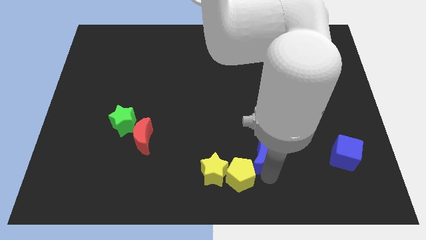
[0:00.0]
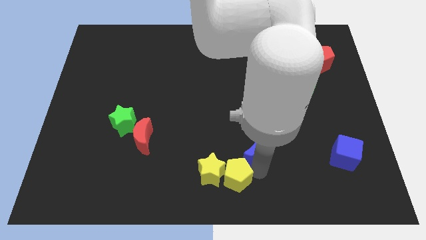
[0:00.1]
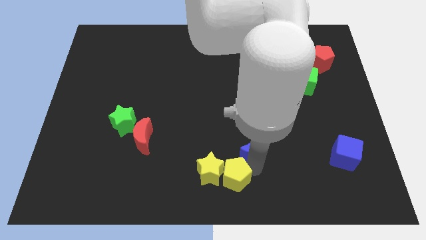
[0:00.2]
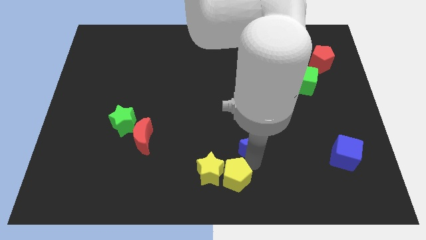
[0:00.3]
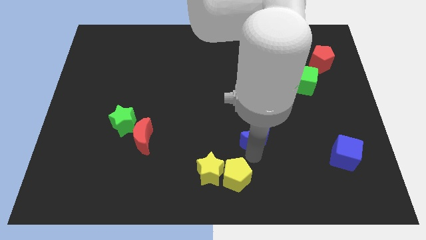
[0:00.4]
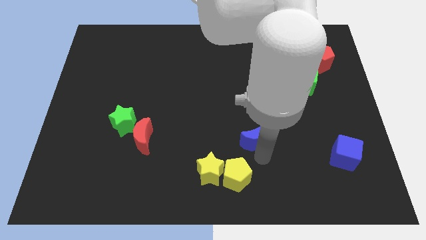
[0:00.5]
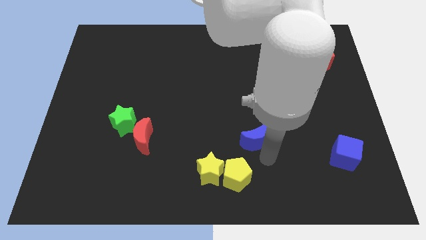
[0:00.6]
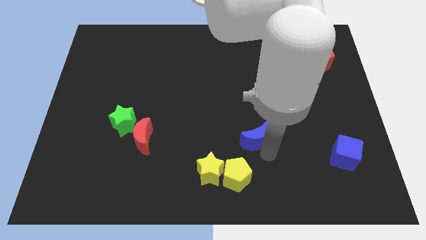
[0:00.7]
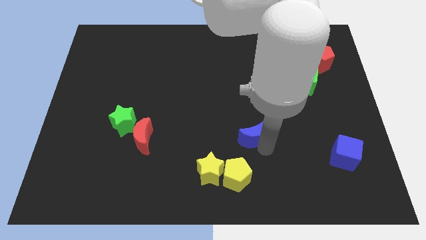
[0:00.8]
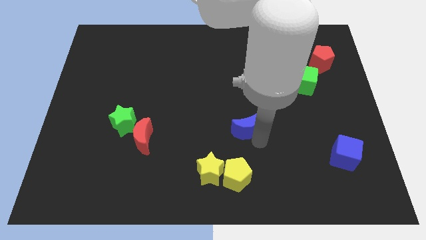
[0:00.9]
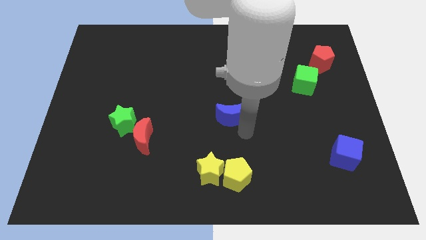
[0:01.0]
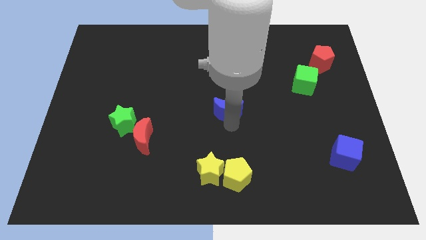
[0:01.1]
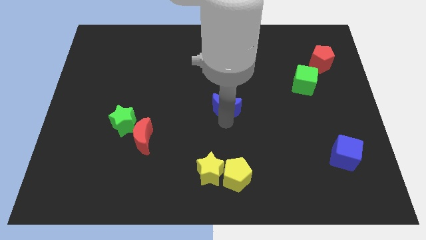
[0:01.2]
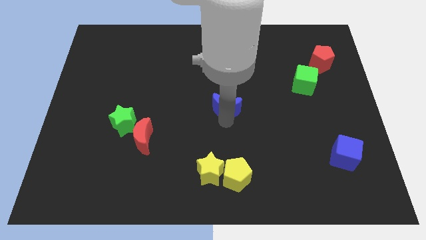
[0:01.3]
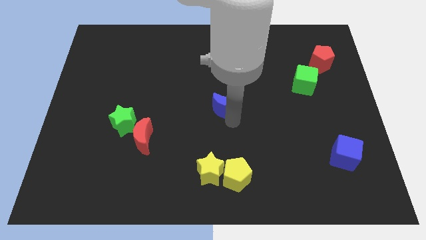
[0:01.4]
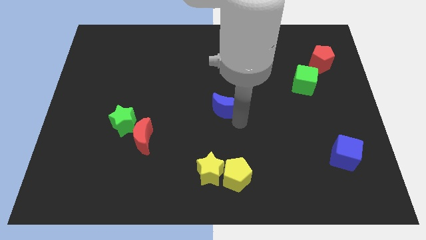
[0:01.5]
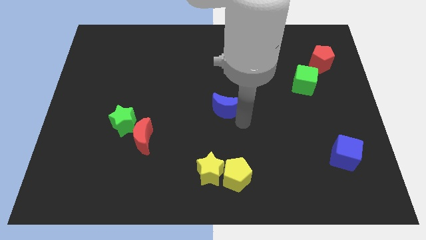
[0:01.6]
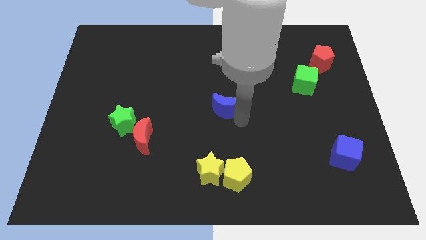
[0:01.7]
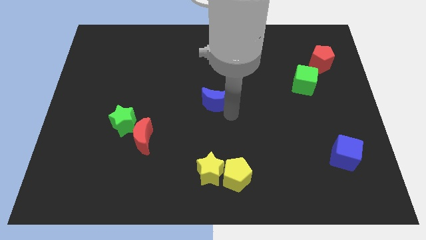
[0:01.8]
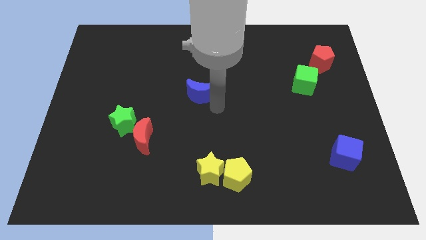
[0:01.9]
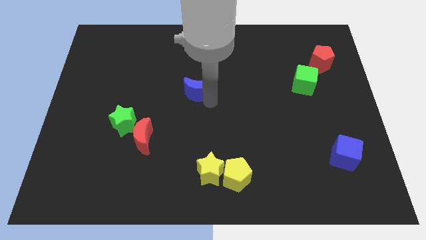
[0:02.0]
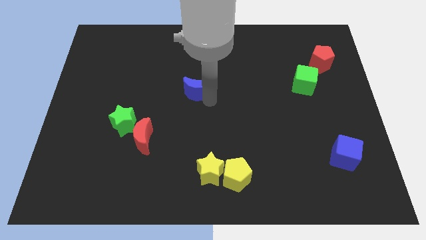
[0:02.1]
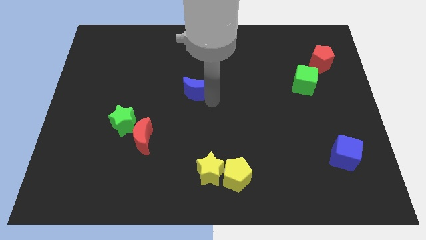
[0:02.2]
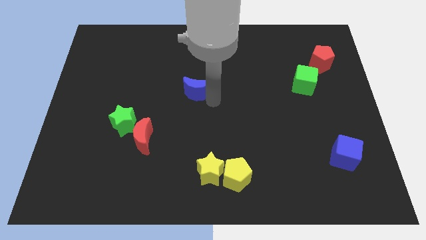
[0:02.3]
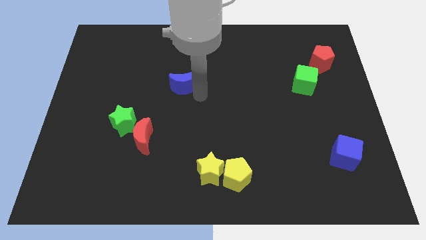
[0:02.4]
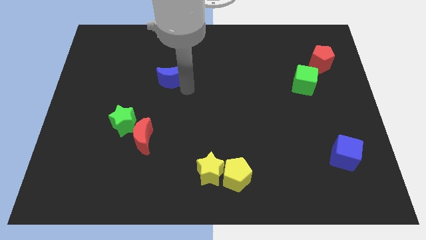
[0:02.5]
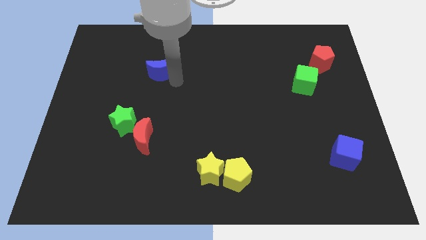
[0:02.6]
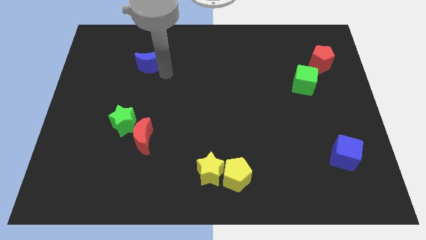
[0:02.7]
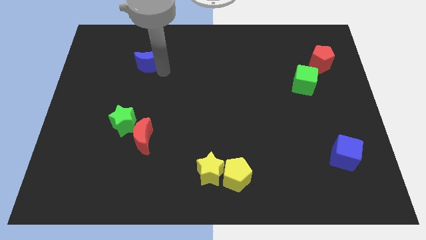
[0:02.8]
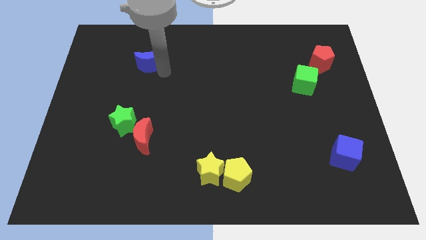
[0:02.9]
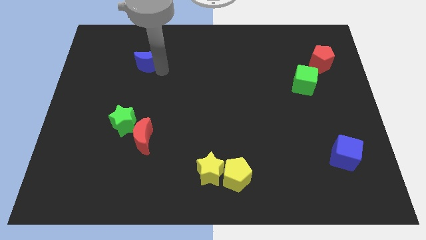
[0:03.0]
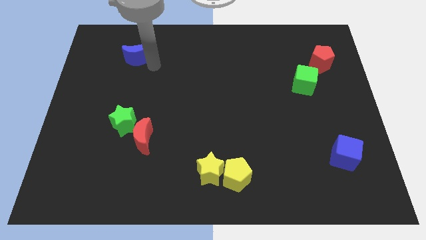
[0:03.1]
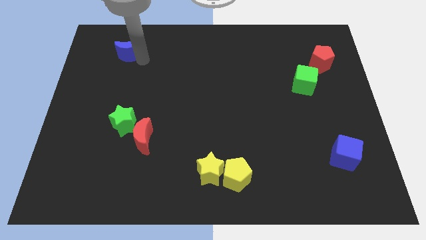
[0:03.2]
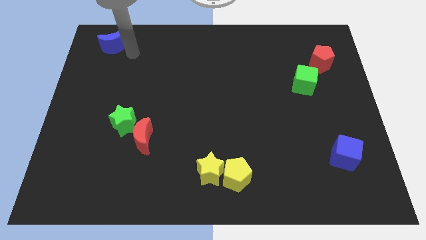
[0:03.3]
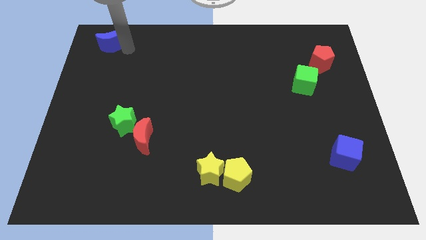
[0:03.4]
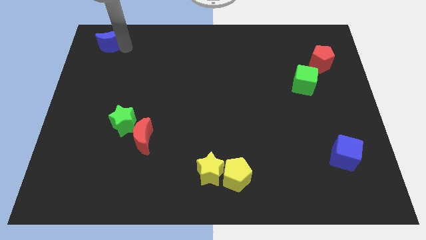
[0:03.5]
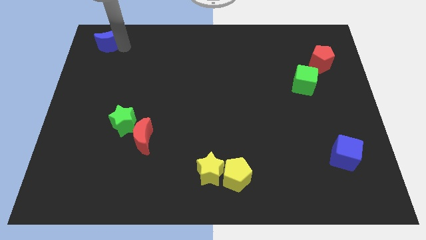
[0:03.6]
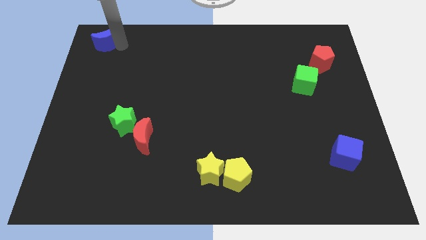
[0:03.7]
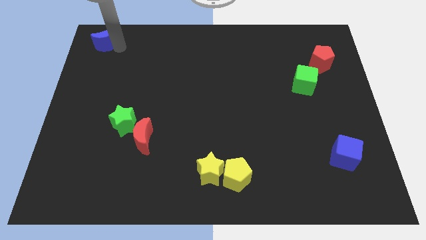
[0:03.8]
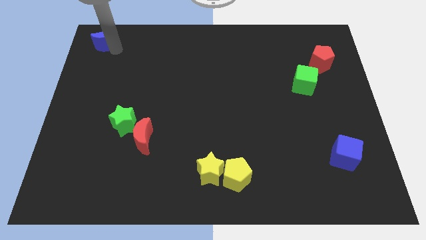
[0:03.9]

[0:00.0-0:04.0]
push the blue moon towards the top left side of the board

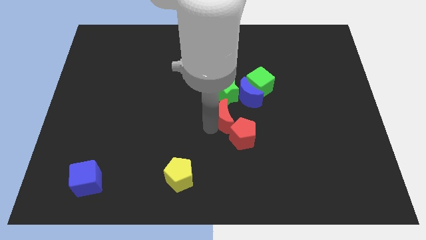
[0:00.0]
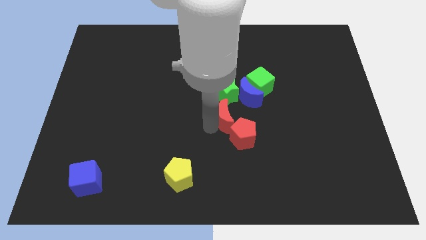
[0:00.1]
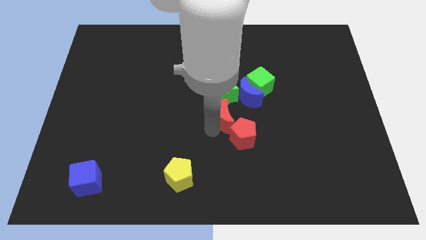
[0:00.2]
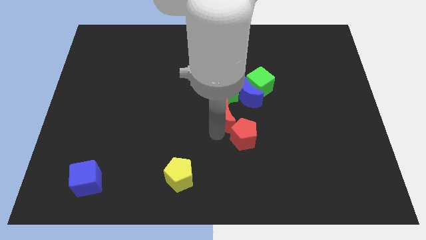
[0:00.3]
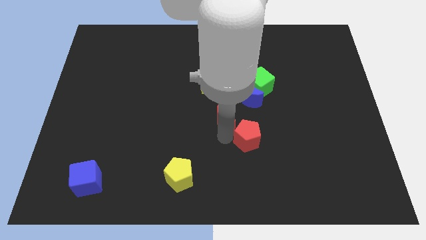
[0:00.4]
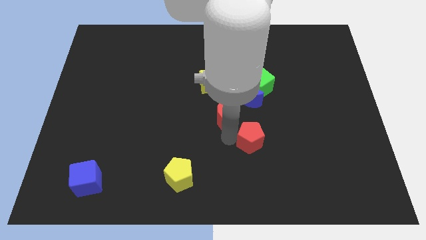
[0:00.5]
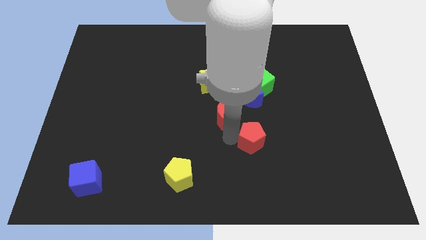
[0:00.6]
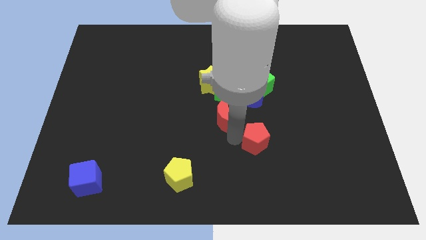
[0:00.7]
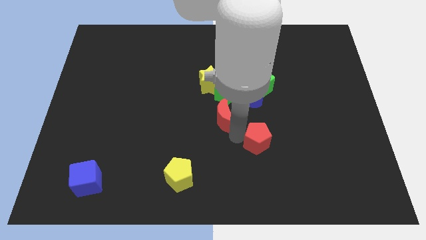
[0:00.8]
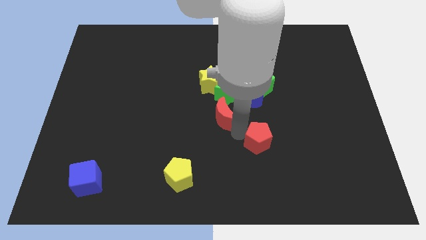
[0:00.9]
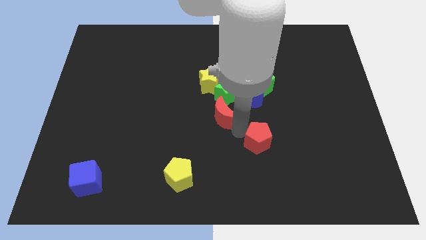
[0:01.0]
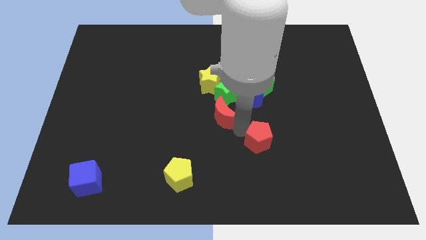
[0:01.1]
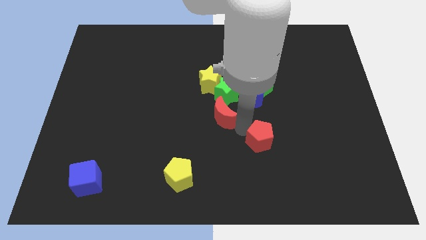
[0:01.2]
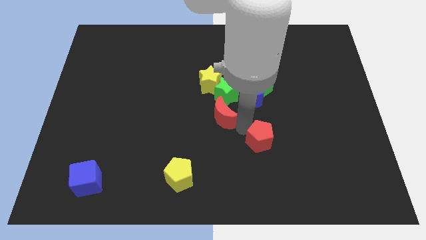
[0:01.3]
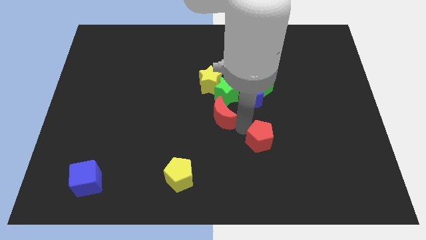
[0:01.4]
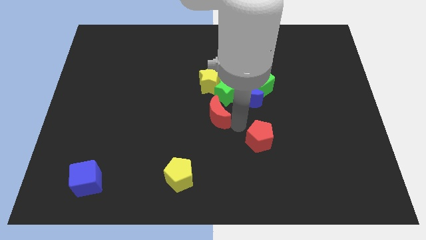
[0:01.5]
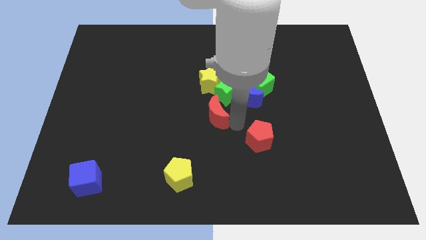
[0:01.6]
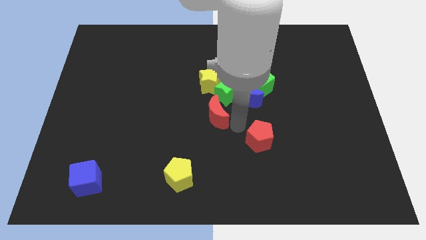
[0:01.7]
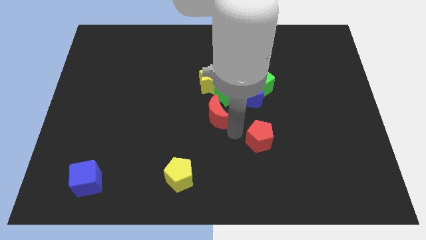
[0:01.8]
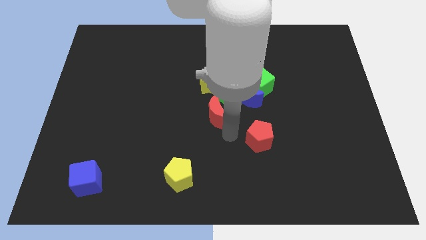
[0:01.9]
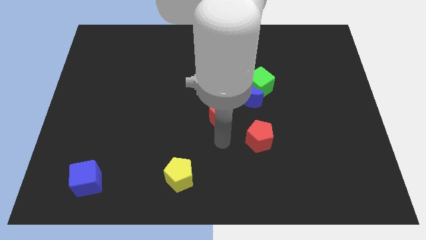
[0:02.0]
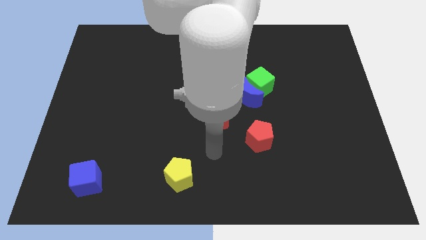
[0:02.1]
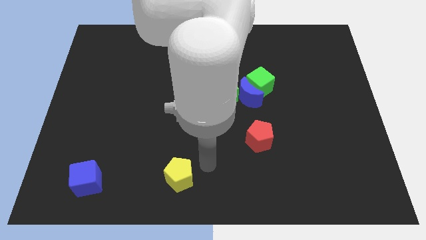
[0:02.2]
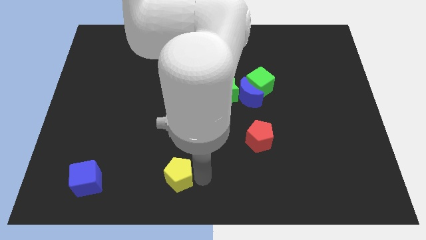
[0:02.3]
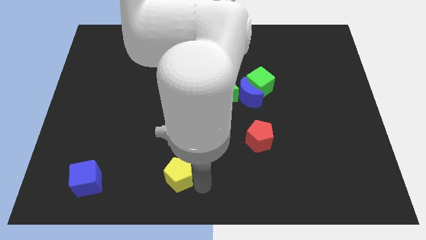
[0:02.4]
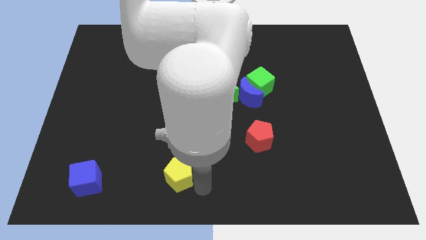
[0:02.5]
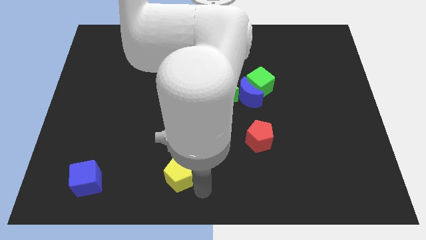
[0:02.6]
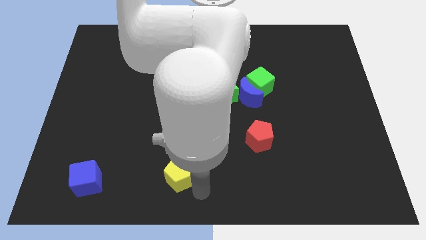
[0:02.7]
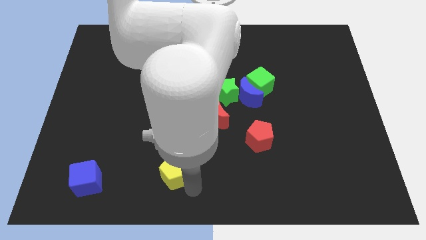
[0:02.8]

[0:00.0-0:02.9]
separate red moon and red pentagon

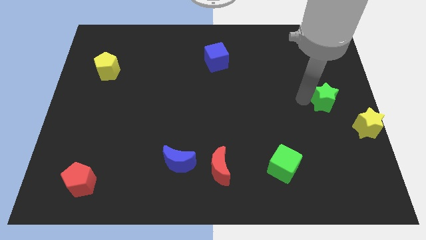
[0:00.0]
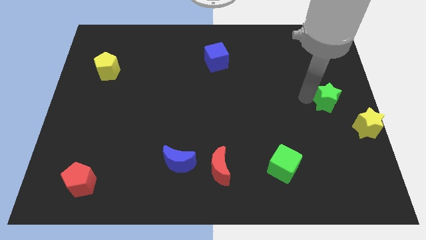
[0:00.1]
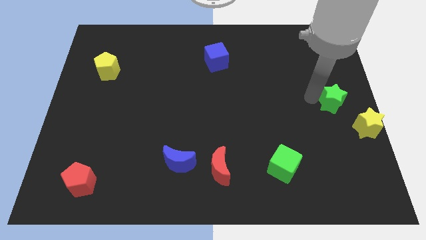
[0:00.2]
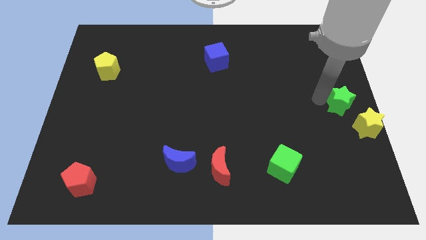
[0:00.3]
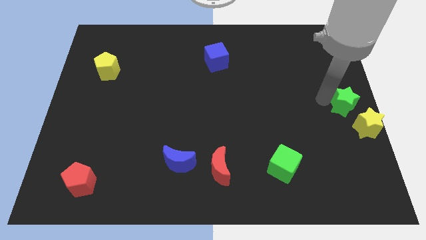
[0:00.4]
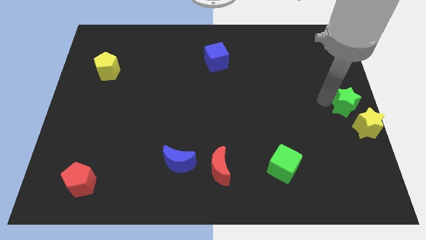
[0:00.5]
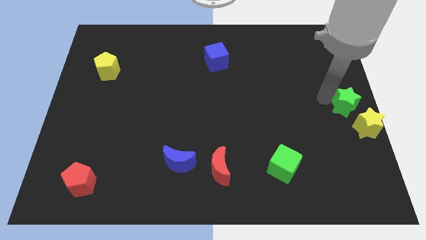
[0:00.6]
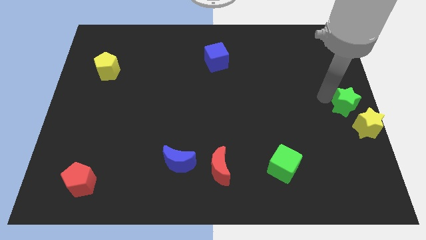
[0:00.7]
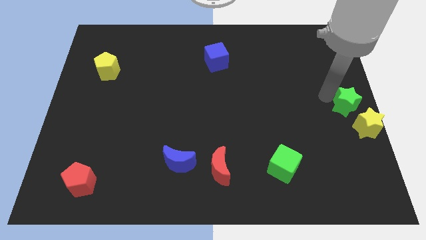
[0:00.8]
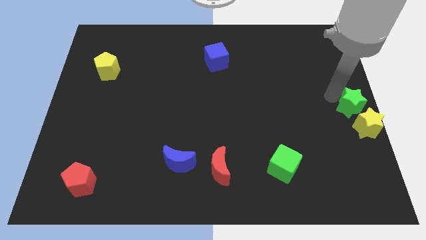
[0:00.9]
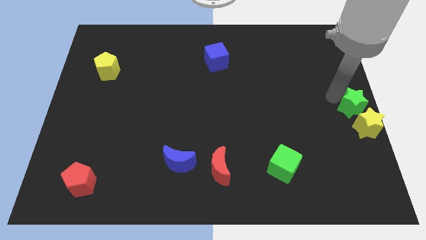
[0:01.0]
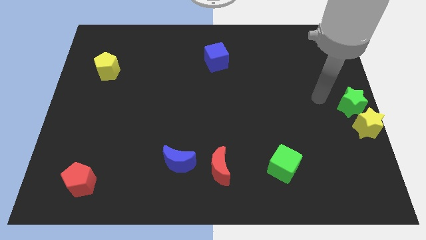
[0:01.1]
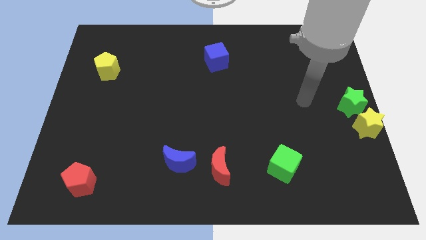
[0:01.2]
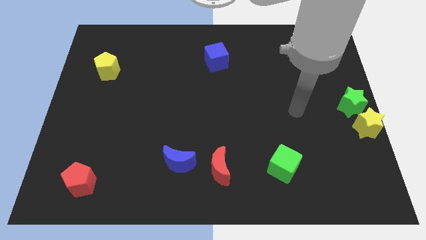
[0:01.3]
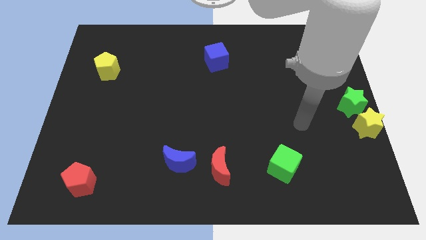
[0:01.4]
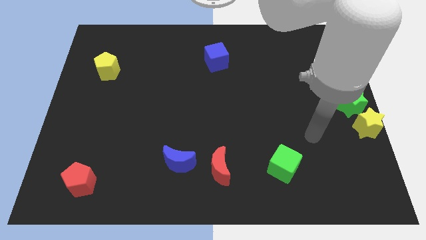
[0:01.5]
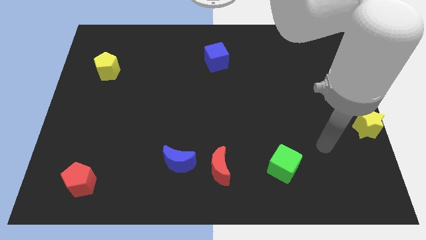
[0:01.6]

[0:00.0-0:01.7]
move the green star towards the top of the yellow star

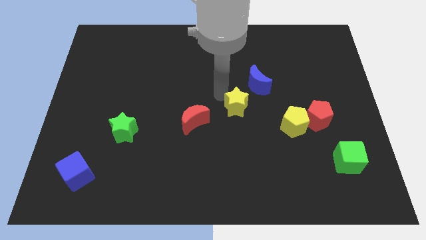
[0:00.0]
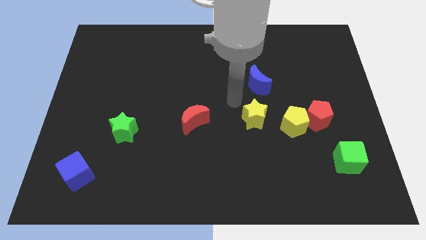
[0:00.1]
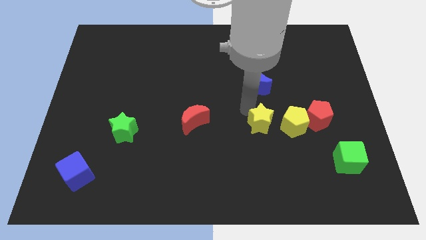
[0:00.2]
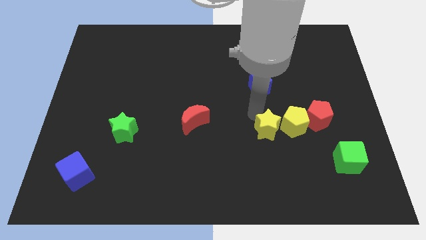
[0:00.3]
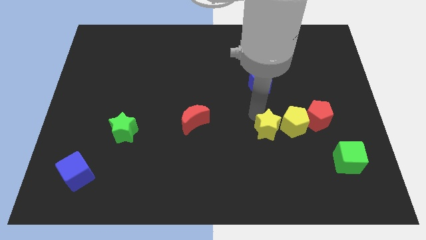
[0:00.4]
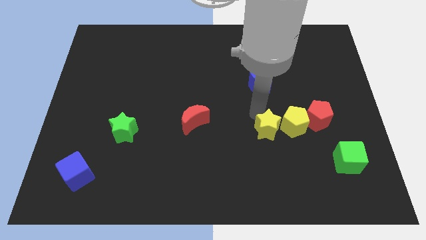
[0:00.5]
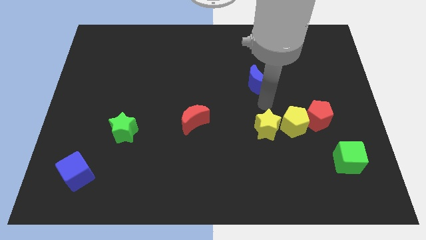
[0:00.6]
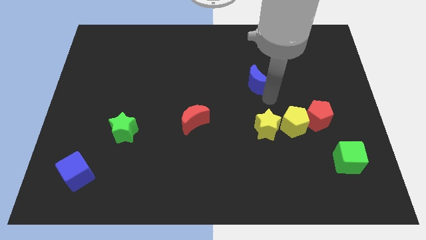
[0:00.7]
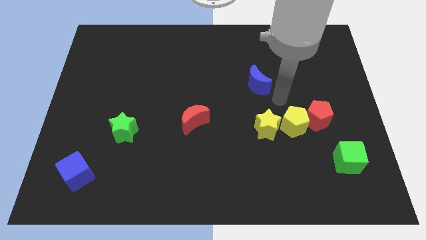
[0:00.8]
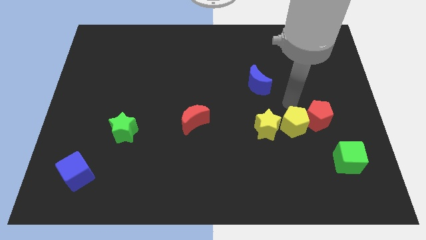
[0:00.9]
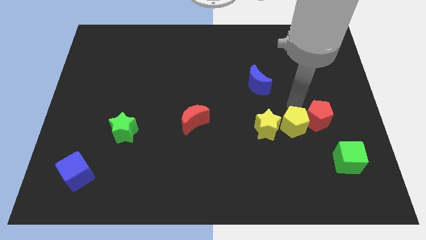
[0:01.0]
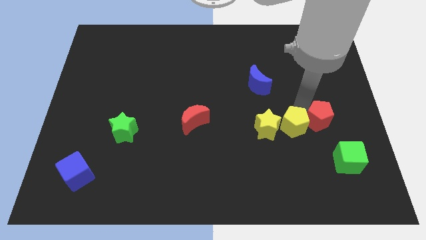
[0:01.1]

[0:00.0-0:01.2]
move the yellow star into the yellow pentagon
